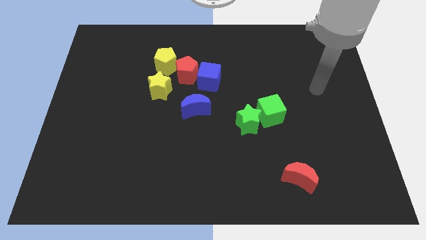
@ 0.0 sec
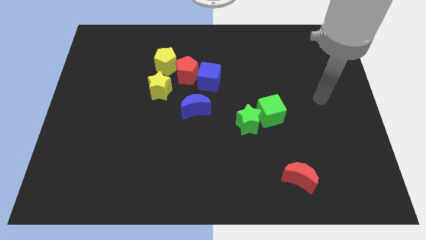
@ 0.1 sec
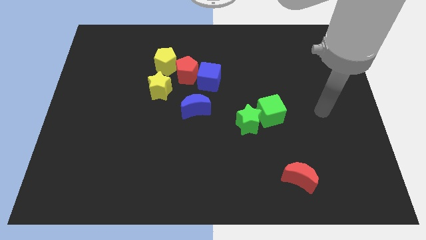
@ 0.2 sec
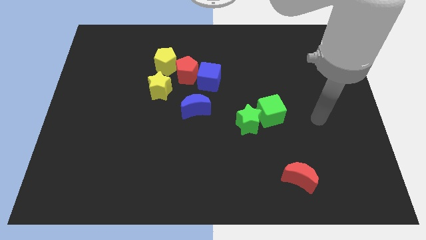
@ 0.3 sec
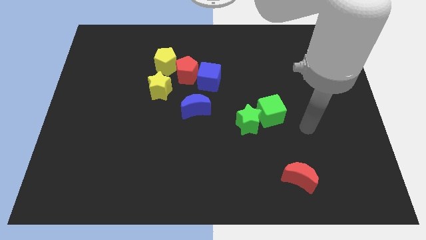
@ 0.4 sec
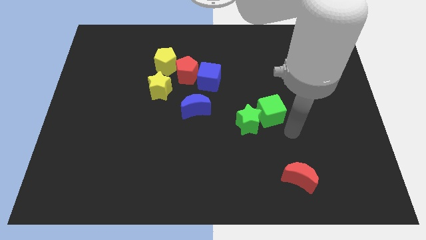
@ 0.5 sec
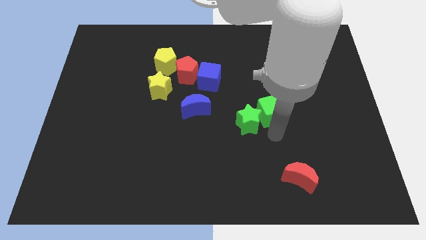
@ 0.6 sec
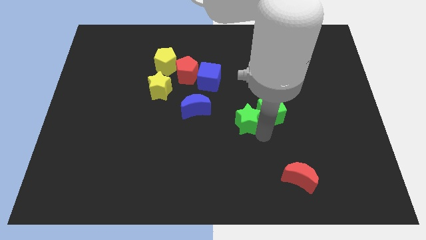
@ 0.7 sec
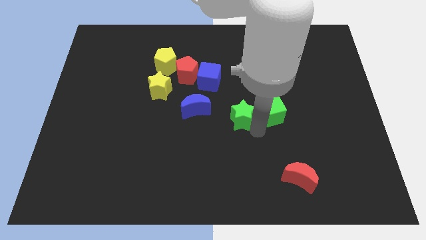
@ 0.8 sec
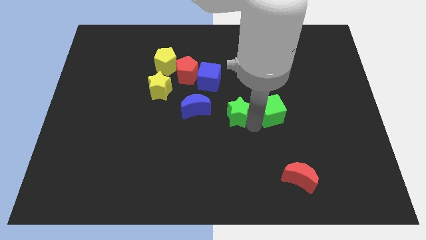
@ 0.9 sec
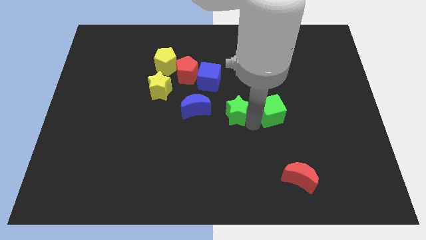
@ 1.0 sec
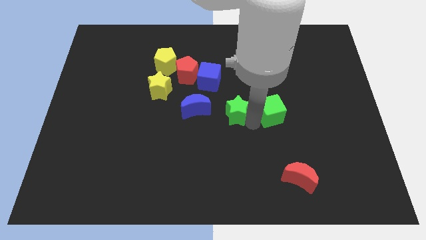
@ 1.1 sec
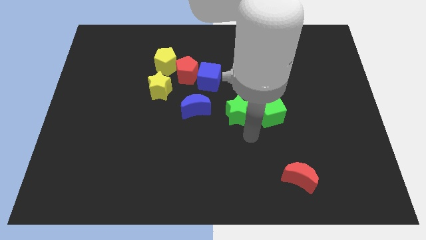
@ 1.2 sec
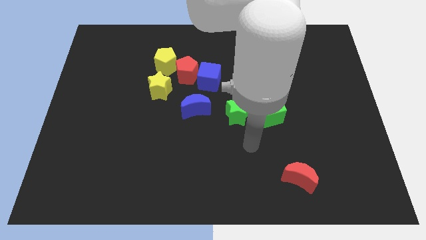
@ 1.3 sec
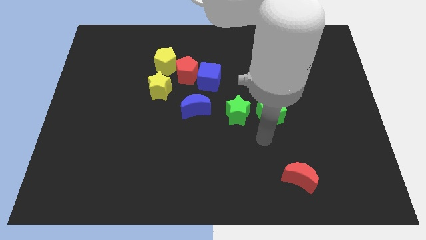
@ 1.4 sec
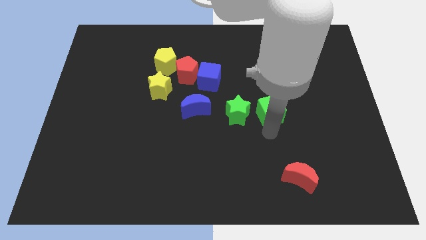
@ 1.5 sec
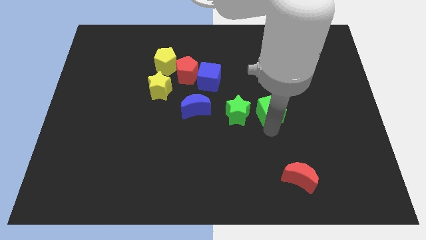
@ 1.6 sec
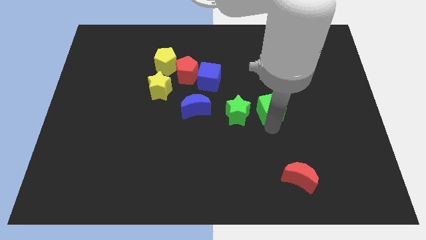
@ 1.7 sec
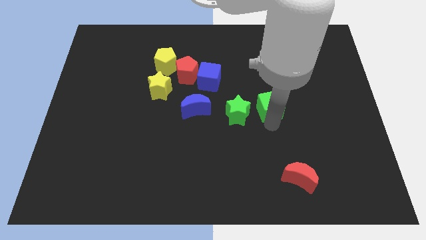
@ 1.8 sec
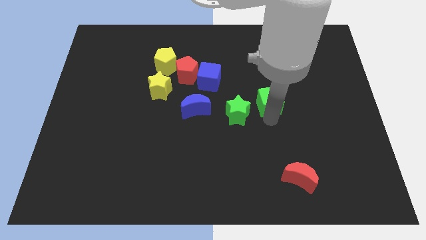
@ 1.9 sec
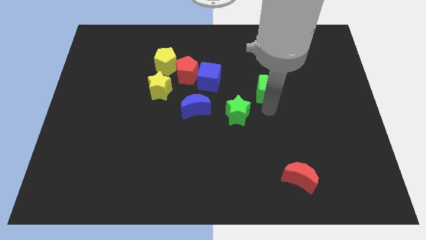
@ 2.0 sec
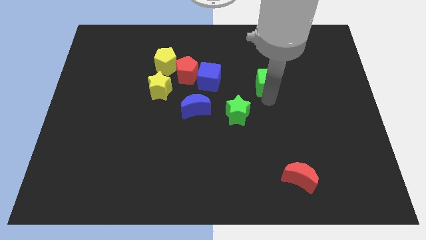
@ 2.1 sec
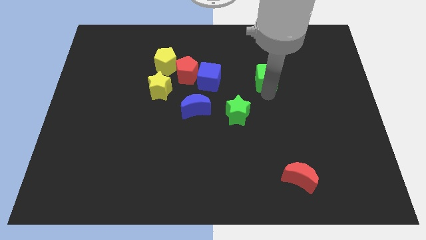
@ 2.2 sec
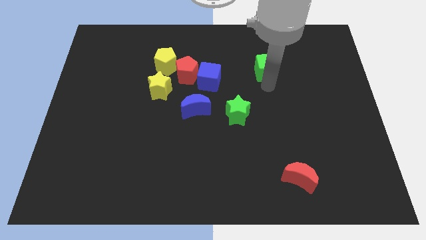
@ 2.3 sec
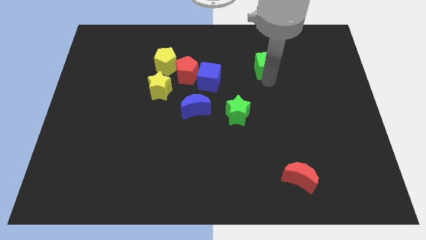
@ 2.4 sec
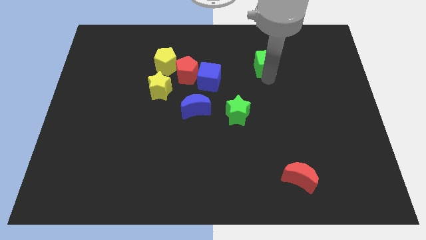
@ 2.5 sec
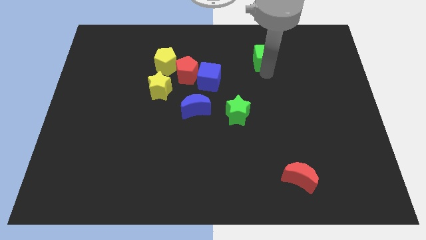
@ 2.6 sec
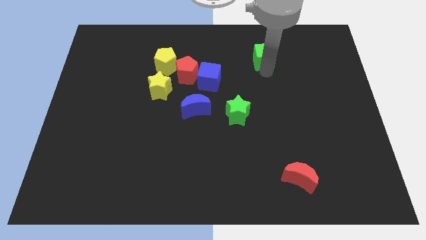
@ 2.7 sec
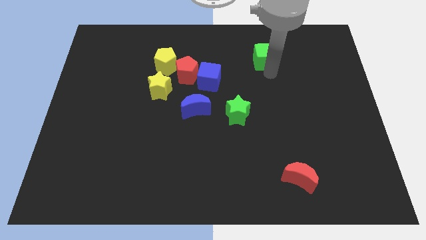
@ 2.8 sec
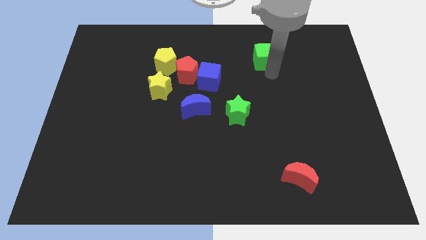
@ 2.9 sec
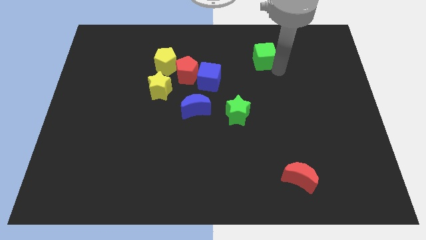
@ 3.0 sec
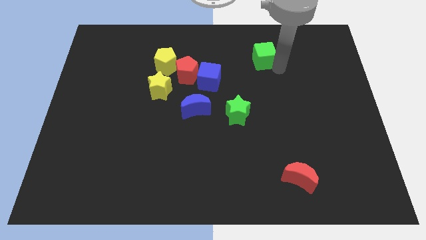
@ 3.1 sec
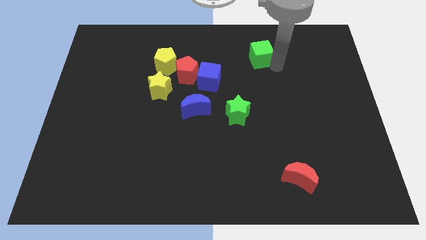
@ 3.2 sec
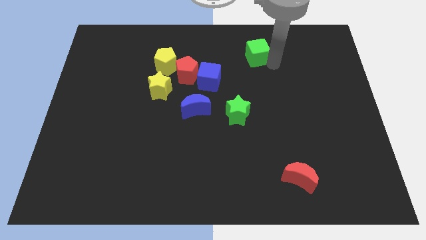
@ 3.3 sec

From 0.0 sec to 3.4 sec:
push the green cube towards the top

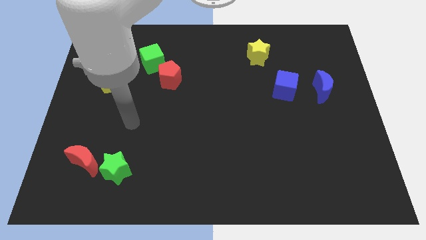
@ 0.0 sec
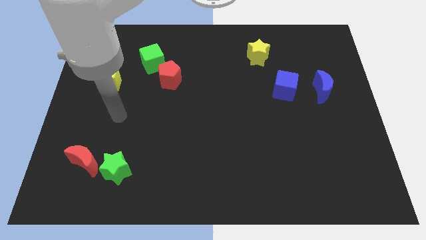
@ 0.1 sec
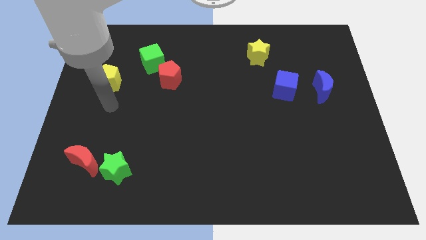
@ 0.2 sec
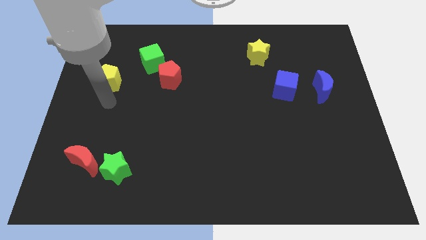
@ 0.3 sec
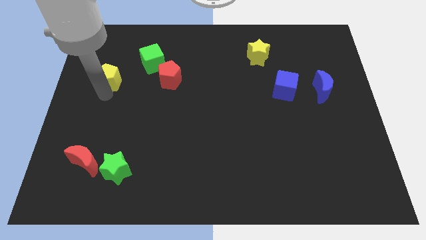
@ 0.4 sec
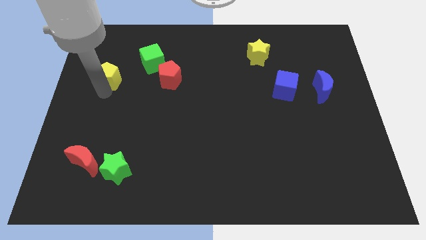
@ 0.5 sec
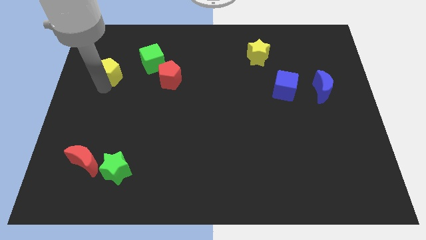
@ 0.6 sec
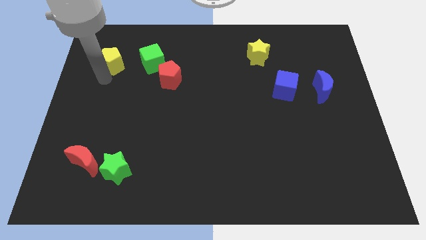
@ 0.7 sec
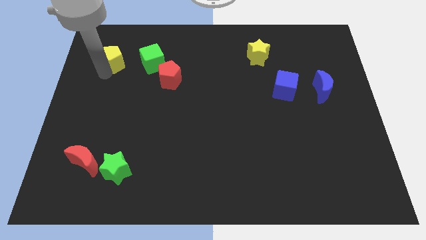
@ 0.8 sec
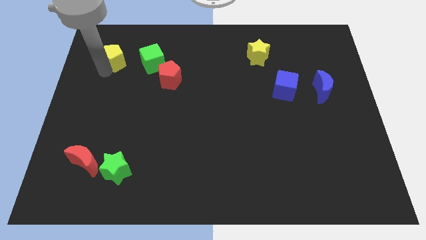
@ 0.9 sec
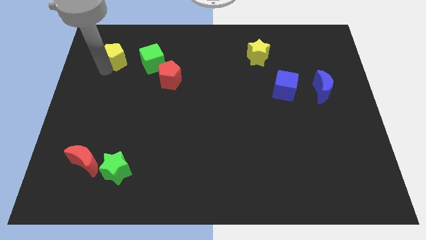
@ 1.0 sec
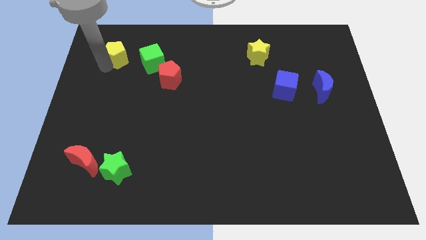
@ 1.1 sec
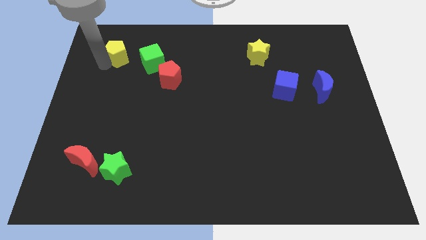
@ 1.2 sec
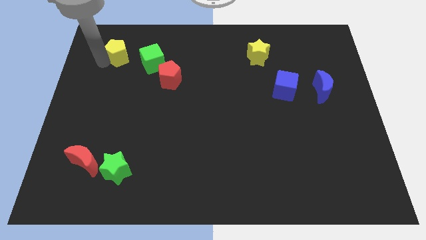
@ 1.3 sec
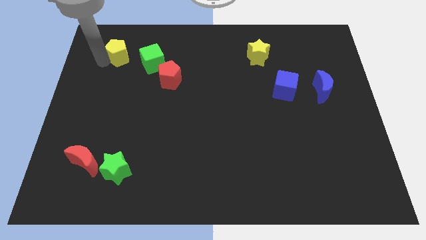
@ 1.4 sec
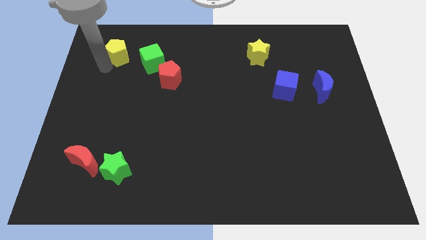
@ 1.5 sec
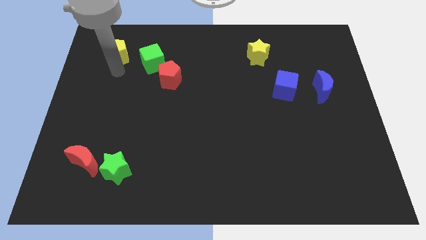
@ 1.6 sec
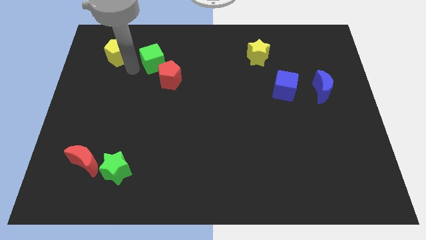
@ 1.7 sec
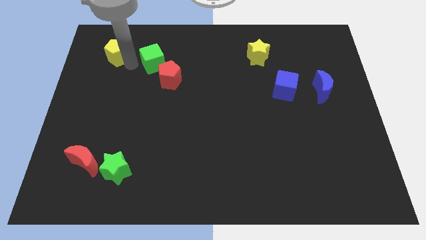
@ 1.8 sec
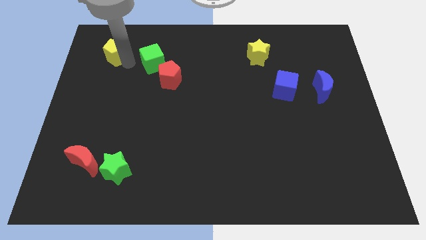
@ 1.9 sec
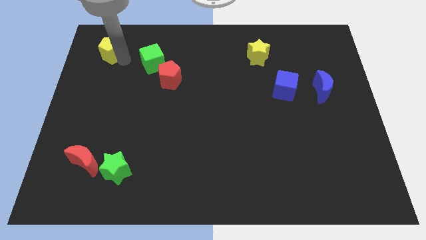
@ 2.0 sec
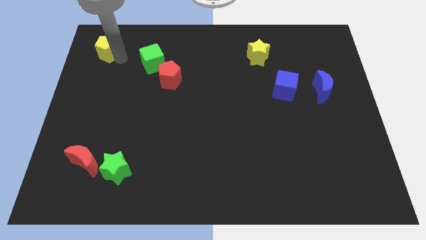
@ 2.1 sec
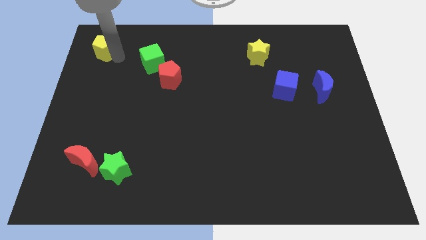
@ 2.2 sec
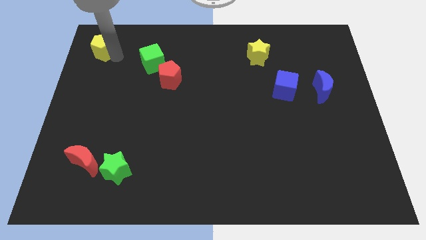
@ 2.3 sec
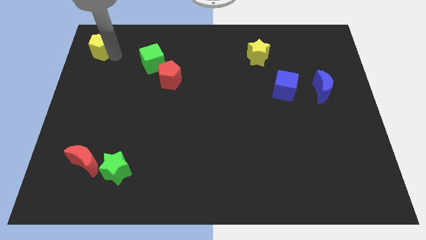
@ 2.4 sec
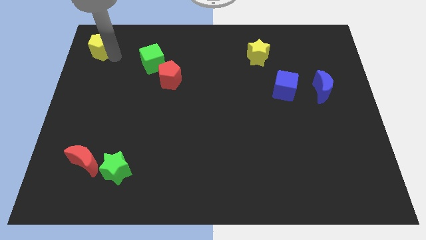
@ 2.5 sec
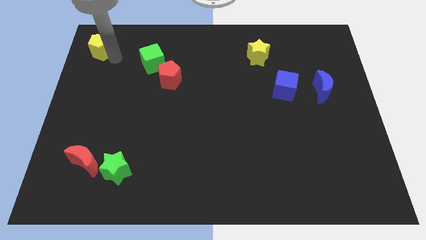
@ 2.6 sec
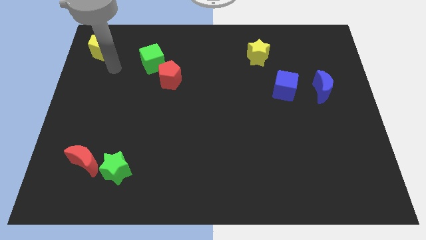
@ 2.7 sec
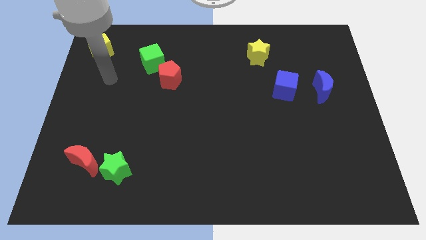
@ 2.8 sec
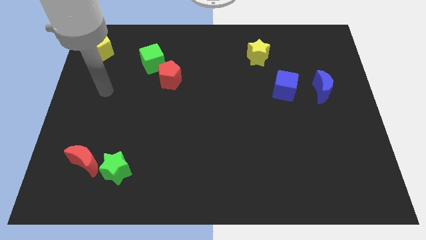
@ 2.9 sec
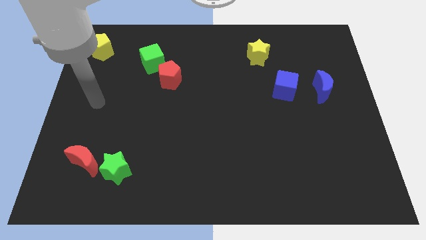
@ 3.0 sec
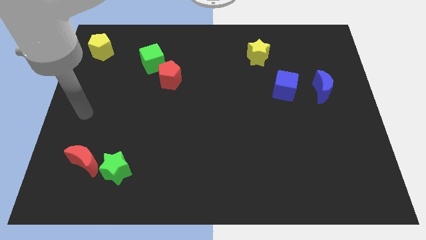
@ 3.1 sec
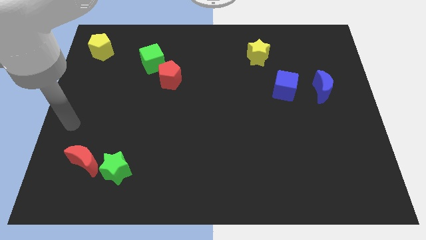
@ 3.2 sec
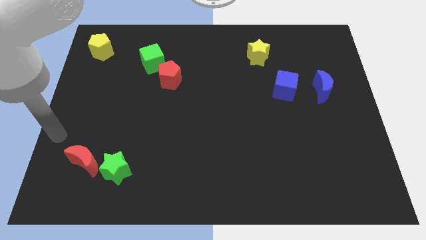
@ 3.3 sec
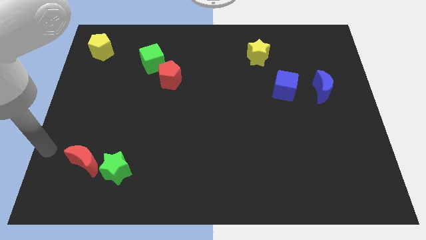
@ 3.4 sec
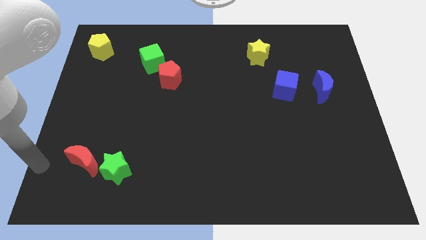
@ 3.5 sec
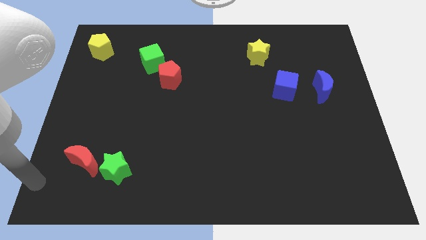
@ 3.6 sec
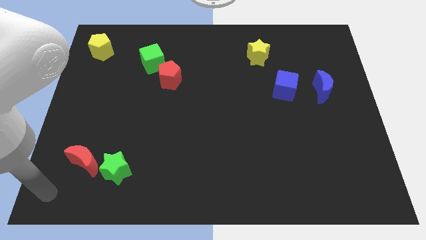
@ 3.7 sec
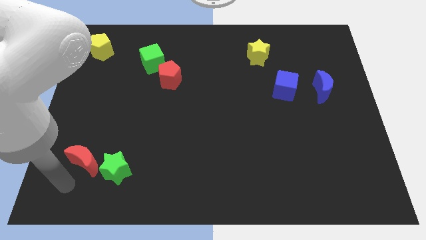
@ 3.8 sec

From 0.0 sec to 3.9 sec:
move the yellow pentagon to the top left

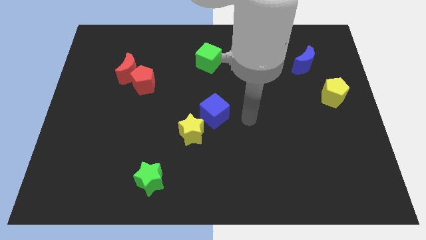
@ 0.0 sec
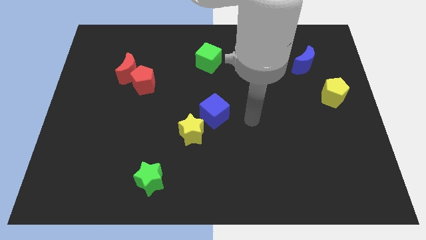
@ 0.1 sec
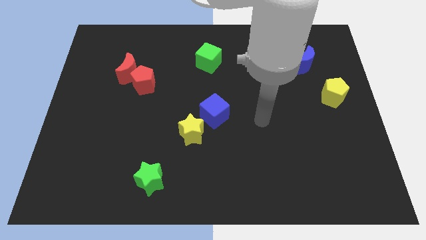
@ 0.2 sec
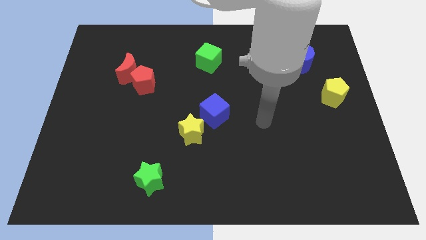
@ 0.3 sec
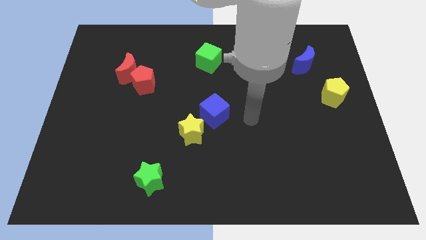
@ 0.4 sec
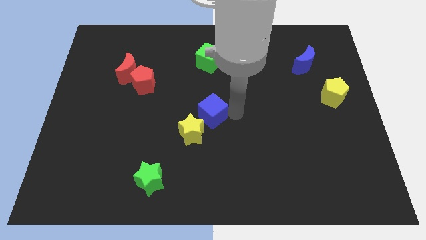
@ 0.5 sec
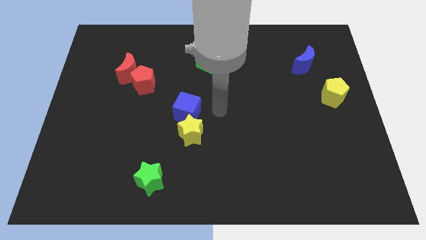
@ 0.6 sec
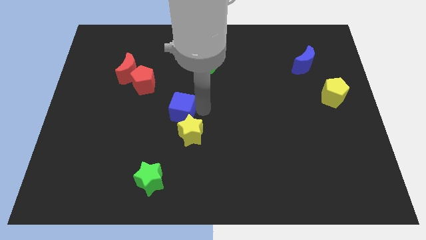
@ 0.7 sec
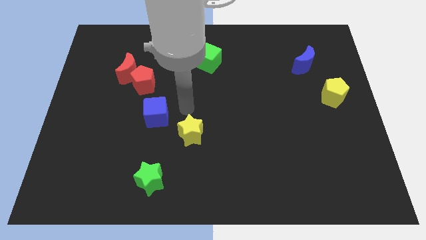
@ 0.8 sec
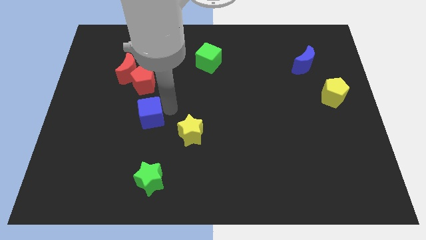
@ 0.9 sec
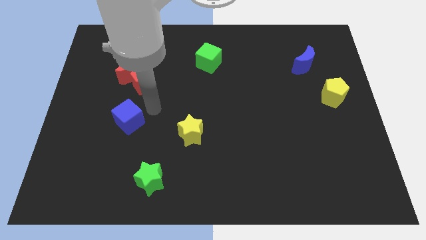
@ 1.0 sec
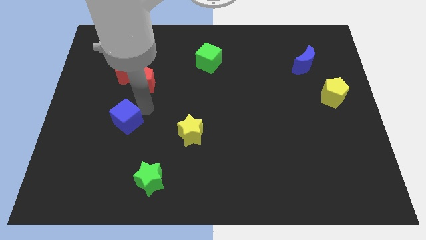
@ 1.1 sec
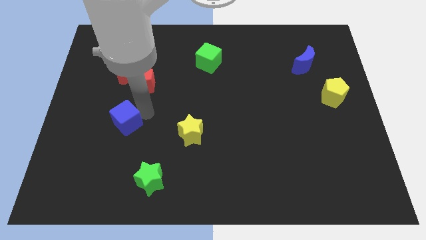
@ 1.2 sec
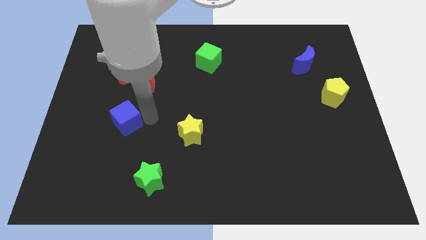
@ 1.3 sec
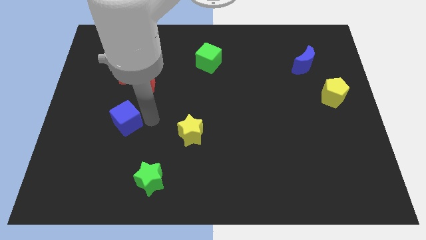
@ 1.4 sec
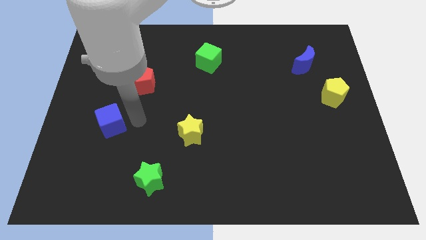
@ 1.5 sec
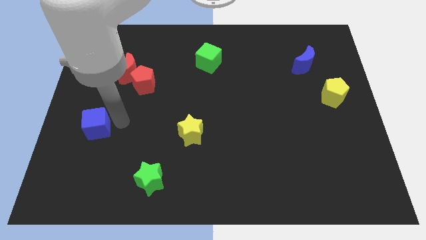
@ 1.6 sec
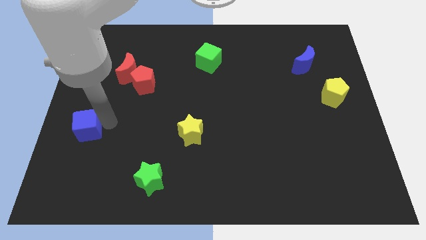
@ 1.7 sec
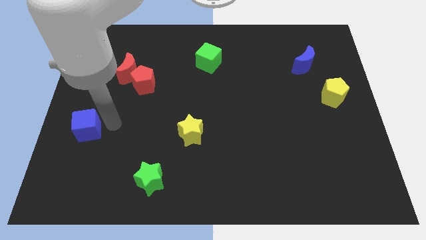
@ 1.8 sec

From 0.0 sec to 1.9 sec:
slide the blue cube towards the left side
